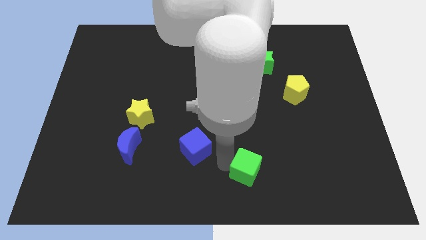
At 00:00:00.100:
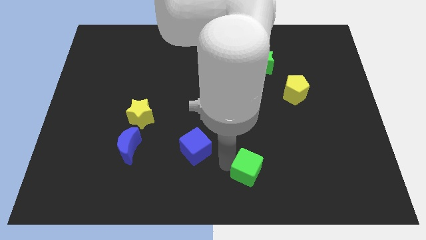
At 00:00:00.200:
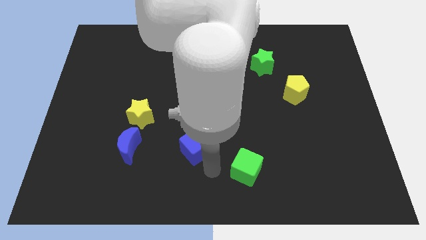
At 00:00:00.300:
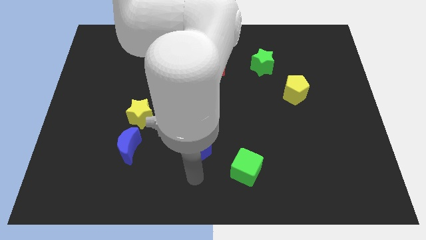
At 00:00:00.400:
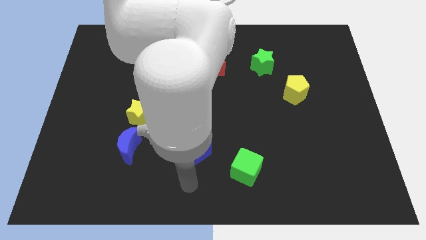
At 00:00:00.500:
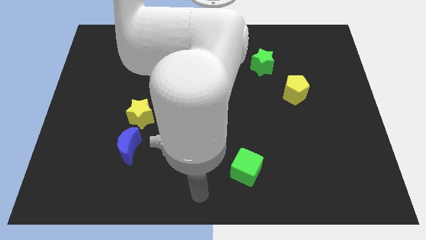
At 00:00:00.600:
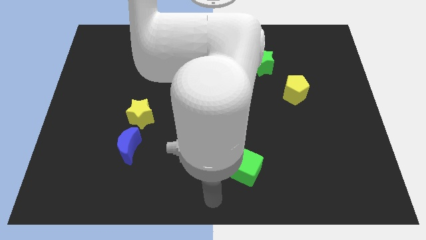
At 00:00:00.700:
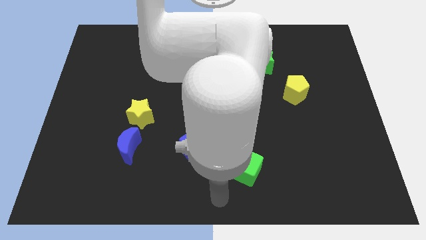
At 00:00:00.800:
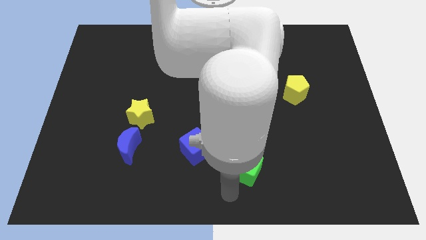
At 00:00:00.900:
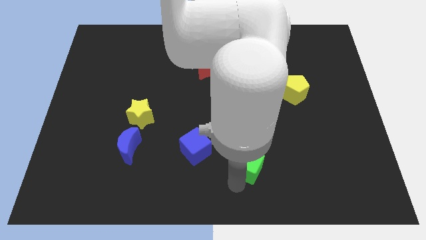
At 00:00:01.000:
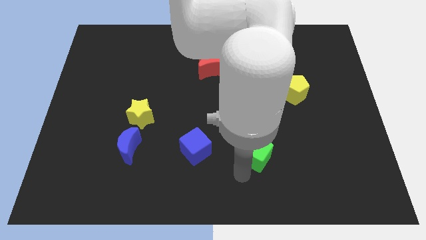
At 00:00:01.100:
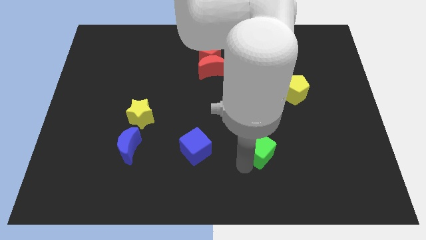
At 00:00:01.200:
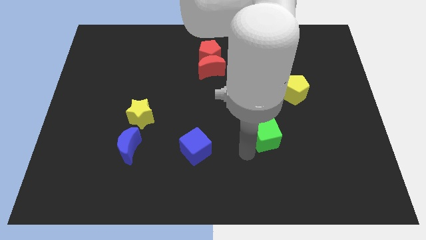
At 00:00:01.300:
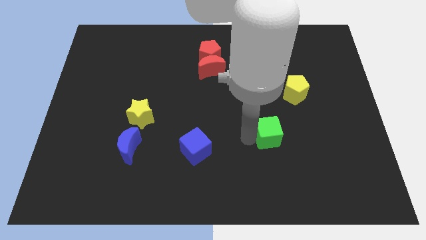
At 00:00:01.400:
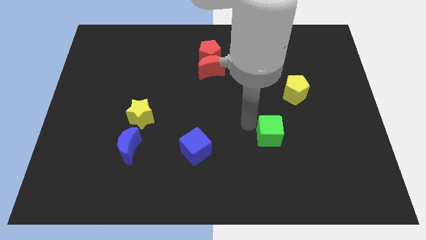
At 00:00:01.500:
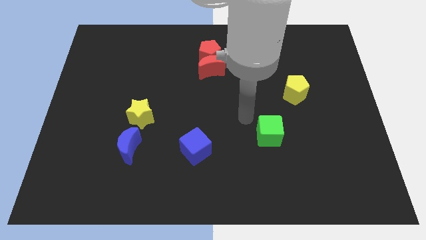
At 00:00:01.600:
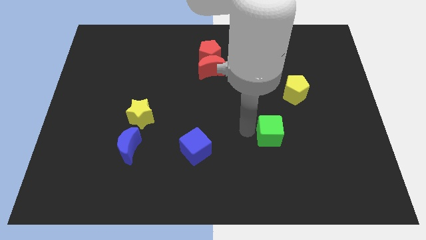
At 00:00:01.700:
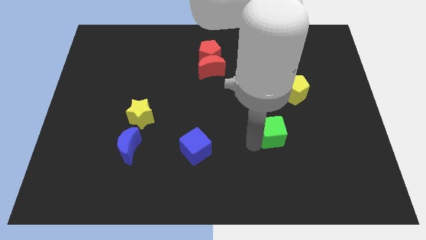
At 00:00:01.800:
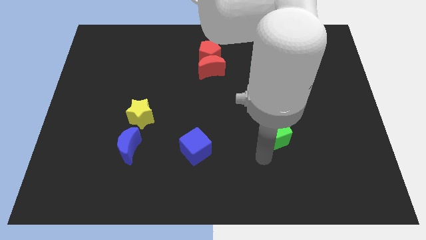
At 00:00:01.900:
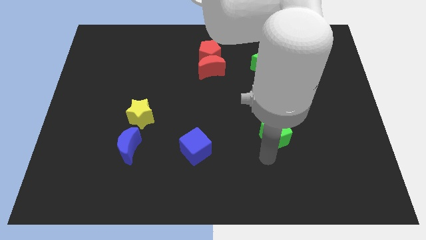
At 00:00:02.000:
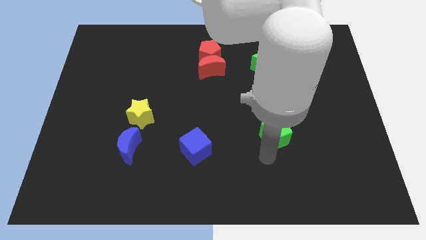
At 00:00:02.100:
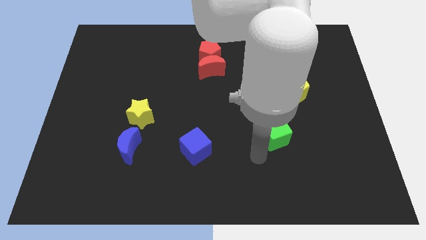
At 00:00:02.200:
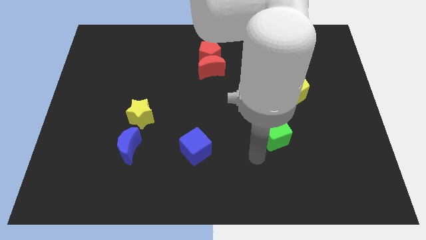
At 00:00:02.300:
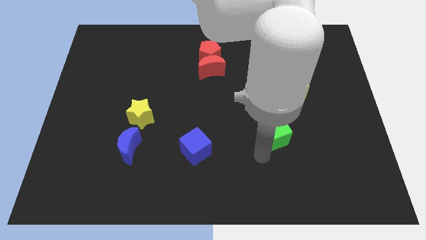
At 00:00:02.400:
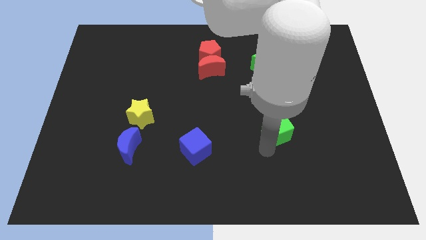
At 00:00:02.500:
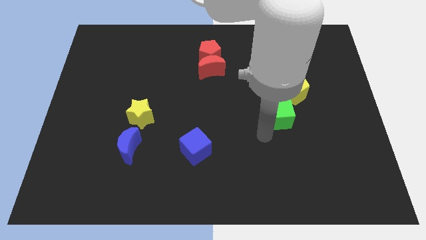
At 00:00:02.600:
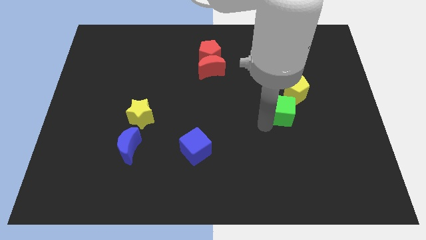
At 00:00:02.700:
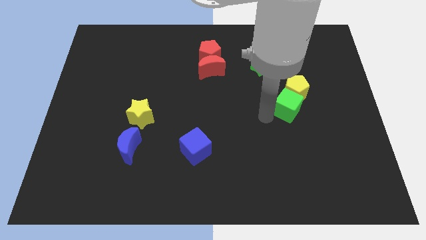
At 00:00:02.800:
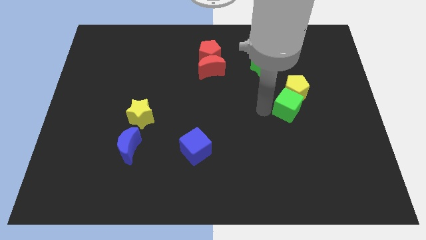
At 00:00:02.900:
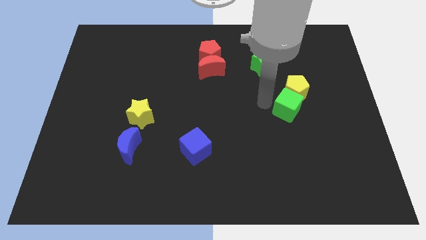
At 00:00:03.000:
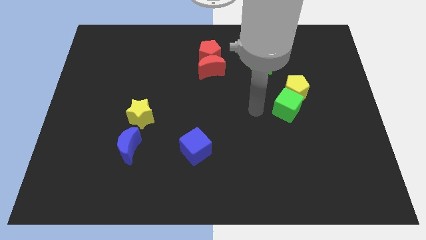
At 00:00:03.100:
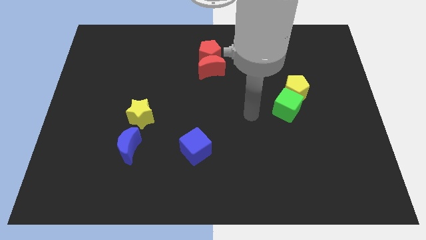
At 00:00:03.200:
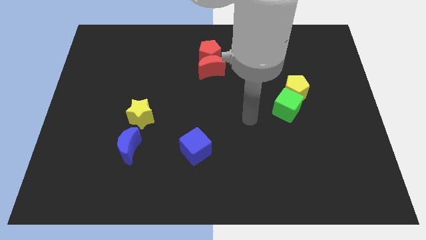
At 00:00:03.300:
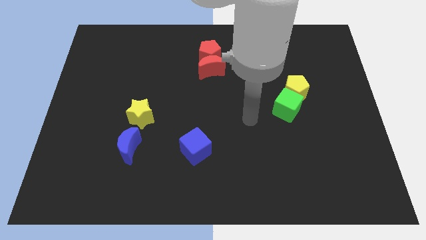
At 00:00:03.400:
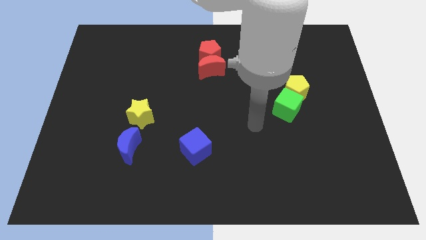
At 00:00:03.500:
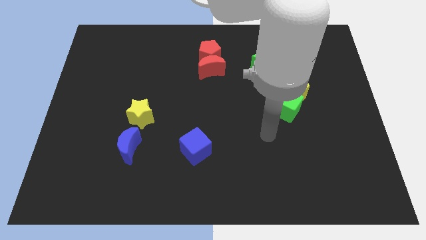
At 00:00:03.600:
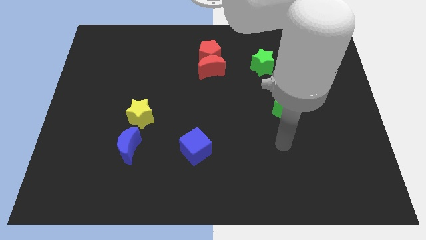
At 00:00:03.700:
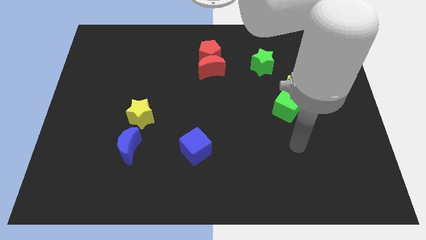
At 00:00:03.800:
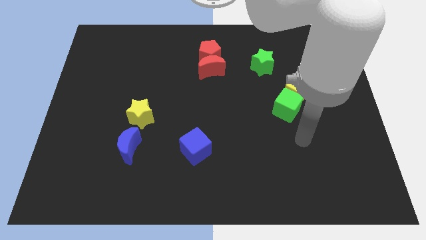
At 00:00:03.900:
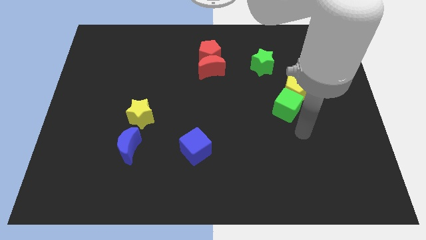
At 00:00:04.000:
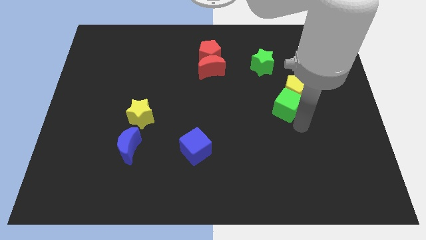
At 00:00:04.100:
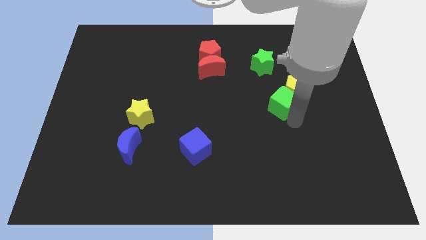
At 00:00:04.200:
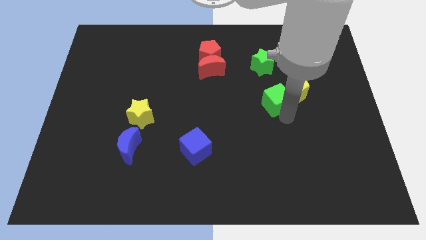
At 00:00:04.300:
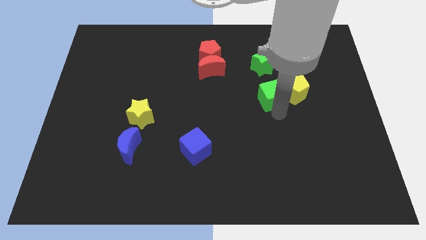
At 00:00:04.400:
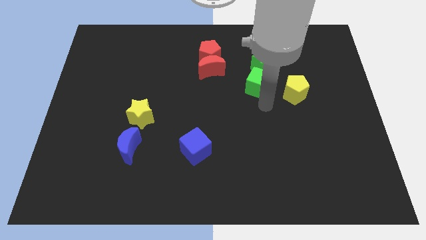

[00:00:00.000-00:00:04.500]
push the green cube towards the top

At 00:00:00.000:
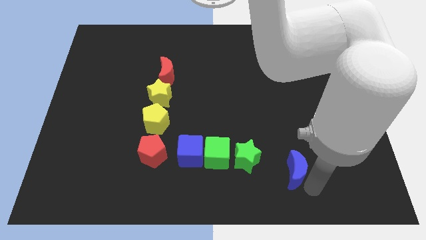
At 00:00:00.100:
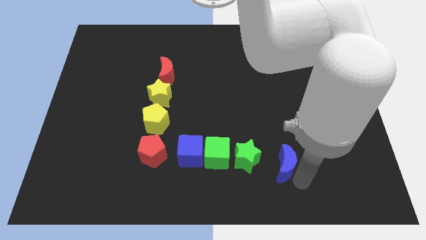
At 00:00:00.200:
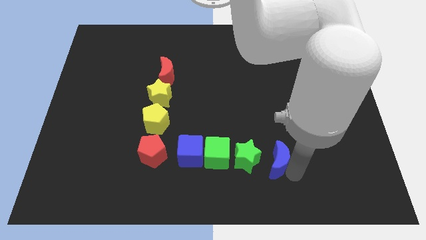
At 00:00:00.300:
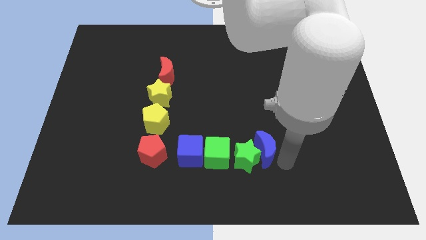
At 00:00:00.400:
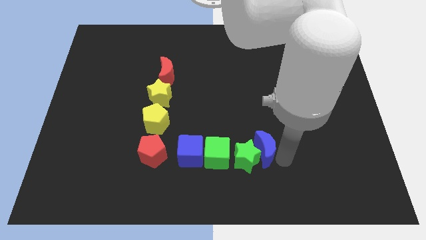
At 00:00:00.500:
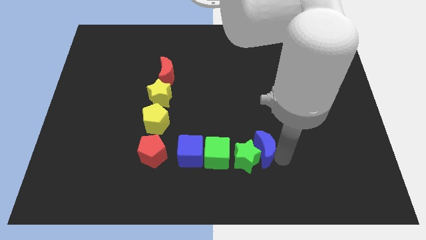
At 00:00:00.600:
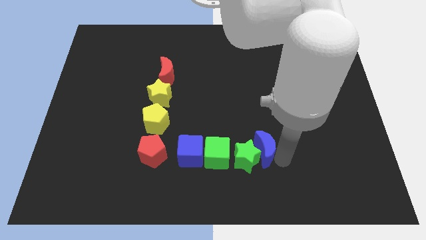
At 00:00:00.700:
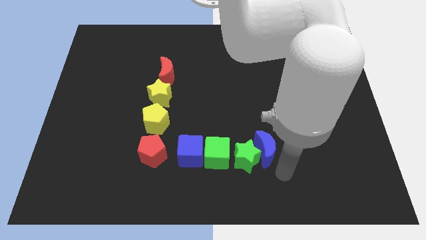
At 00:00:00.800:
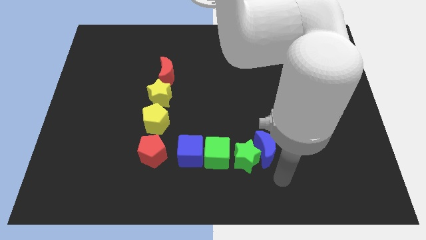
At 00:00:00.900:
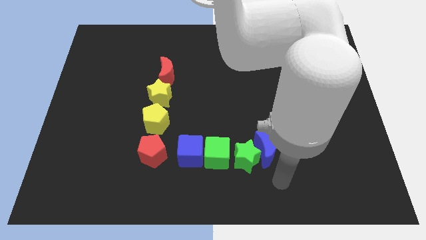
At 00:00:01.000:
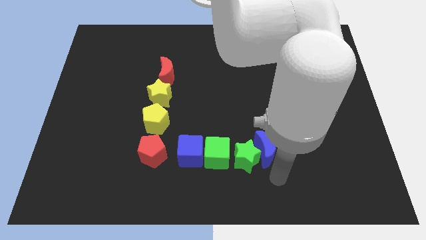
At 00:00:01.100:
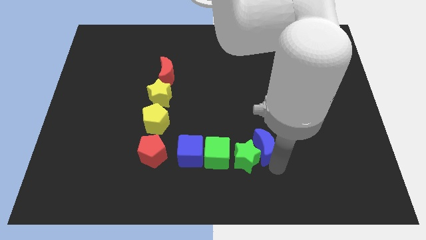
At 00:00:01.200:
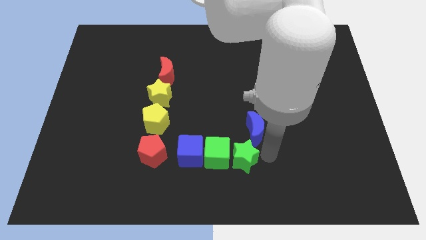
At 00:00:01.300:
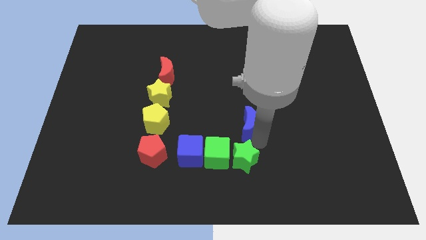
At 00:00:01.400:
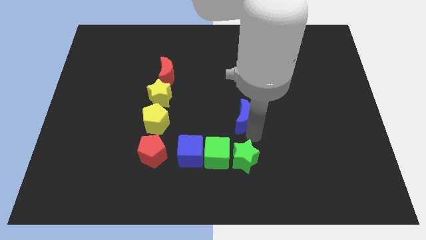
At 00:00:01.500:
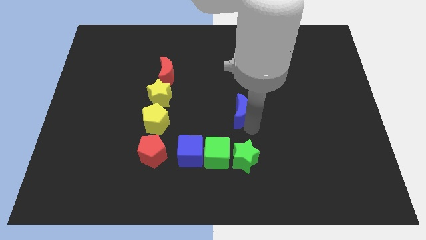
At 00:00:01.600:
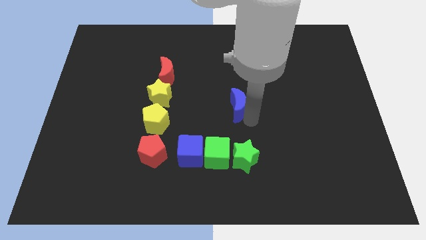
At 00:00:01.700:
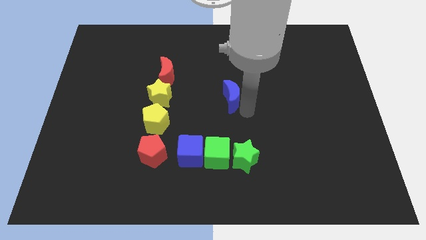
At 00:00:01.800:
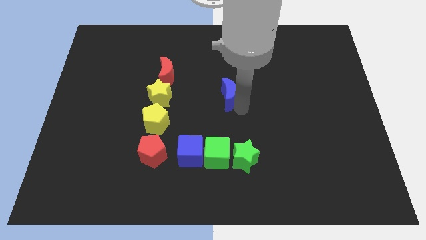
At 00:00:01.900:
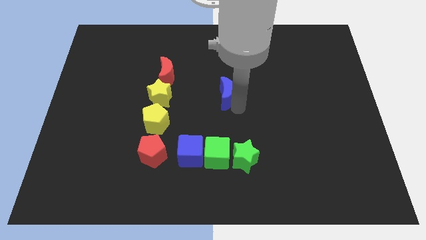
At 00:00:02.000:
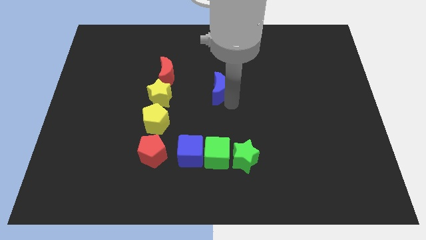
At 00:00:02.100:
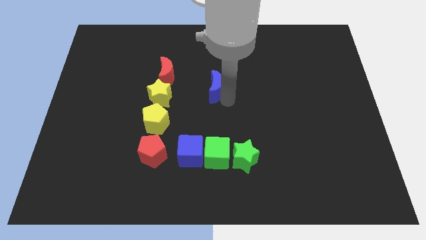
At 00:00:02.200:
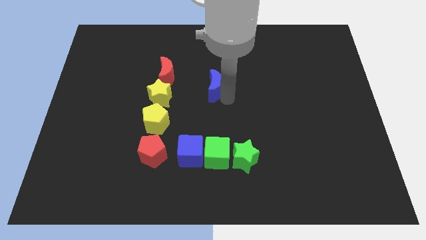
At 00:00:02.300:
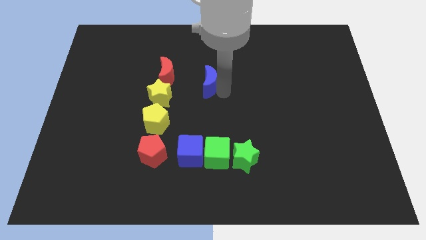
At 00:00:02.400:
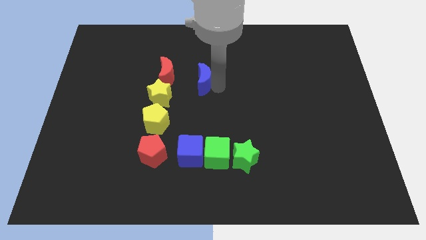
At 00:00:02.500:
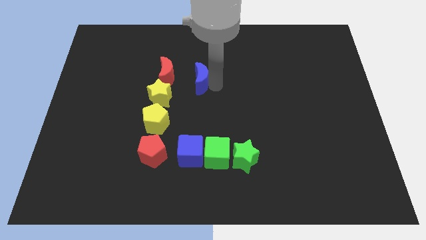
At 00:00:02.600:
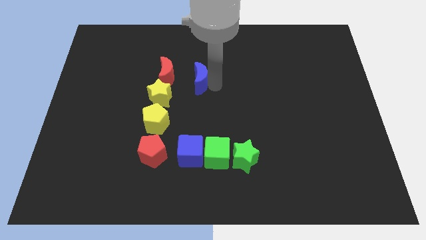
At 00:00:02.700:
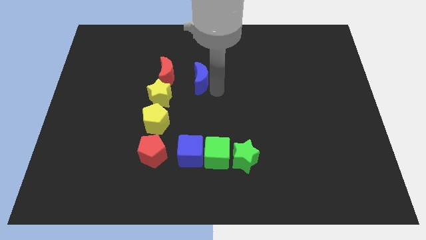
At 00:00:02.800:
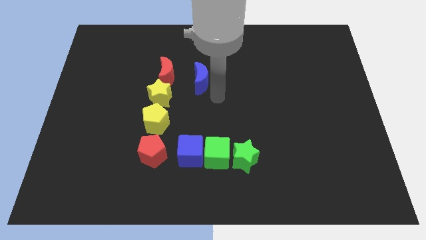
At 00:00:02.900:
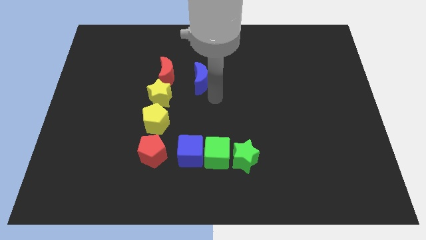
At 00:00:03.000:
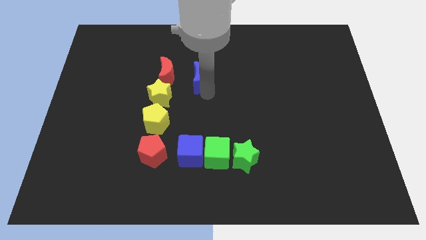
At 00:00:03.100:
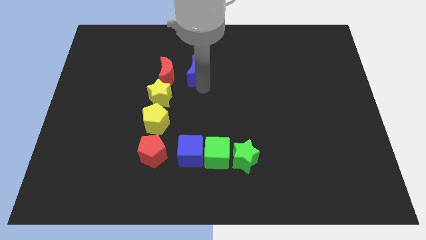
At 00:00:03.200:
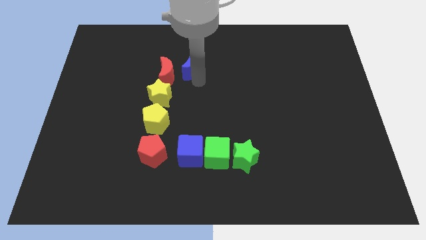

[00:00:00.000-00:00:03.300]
place blue moon to the right of red moon

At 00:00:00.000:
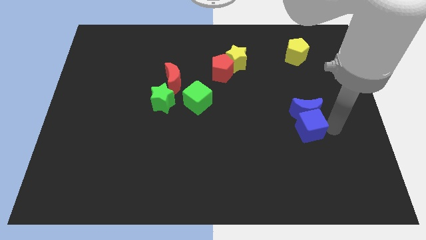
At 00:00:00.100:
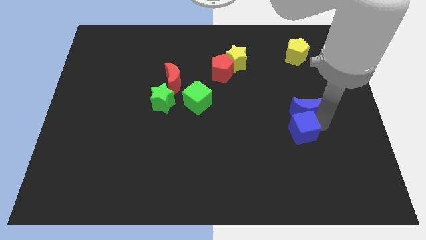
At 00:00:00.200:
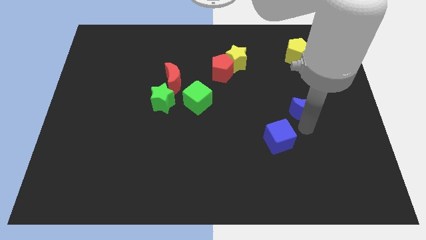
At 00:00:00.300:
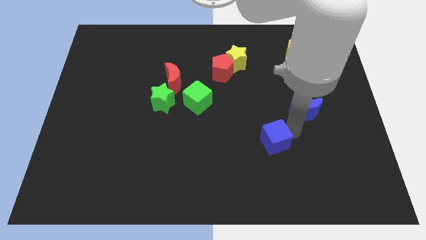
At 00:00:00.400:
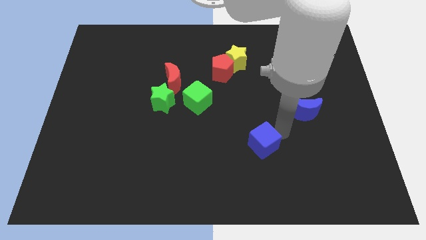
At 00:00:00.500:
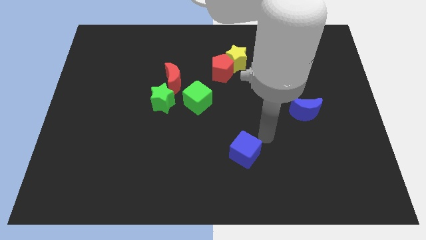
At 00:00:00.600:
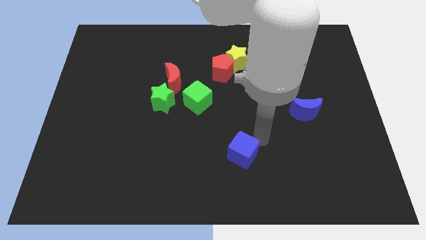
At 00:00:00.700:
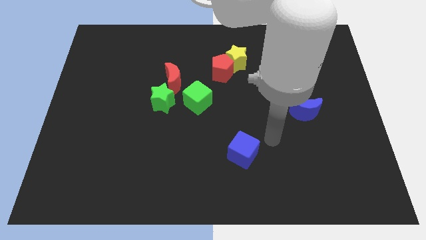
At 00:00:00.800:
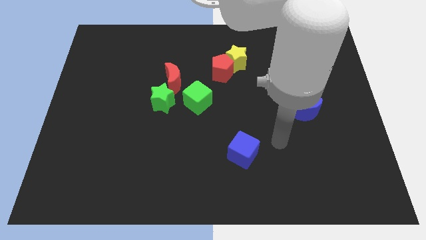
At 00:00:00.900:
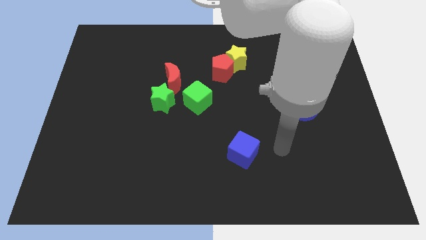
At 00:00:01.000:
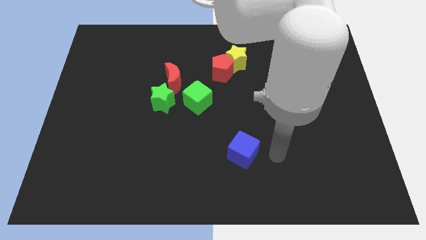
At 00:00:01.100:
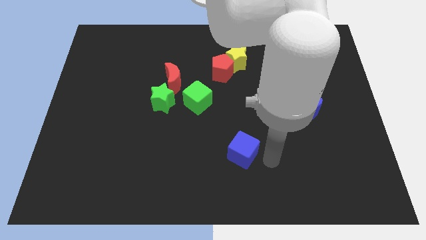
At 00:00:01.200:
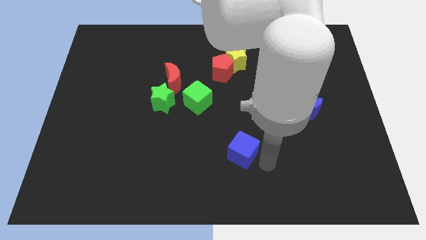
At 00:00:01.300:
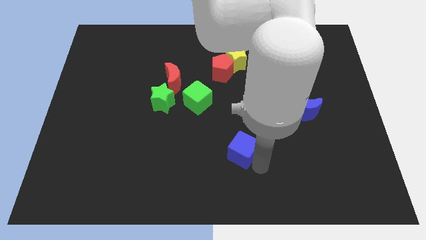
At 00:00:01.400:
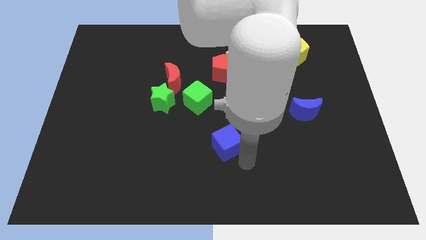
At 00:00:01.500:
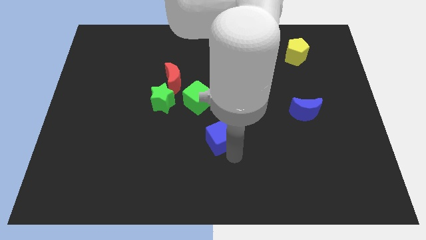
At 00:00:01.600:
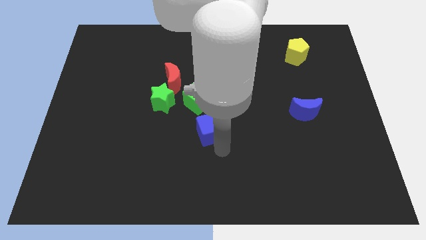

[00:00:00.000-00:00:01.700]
move blue cube to the bottom of the green cube
